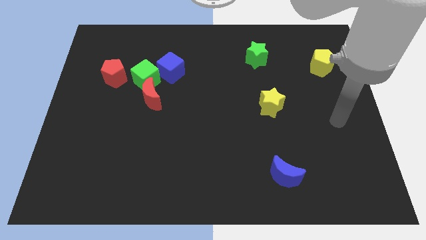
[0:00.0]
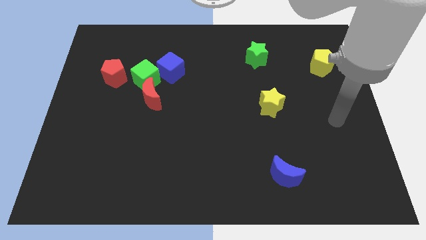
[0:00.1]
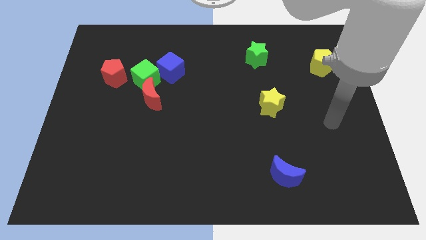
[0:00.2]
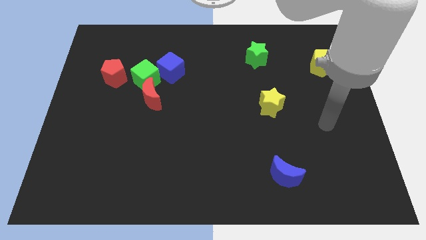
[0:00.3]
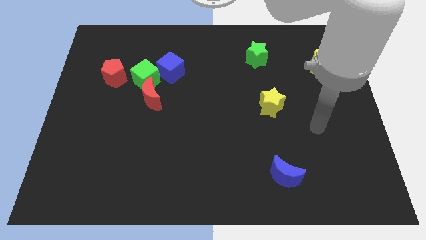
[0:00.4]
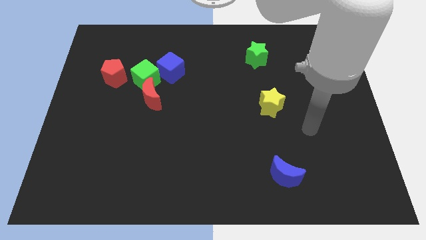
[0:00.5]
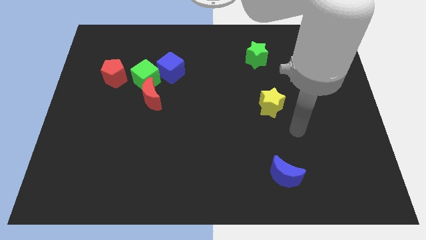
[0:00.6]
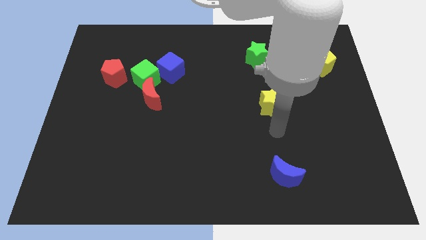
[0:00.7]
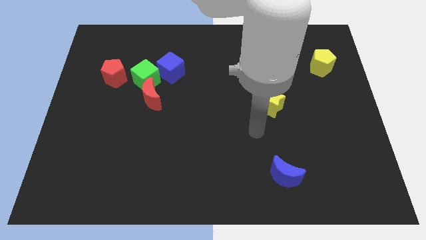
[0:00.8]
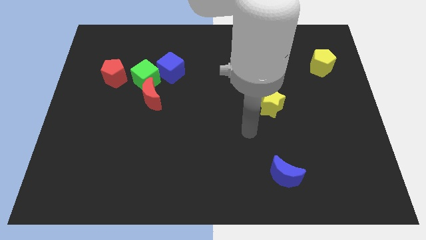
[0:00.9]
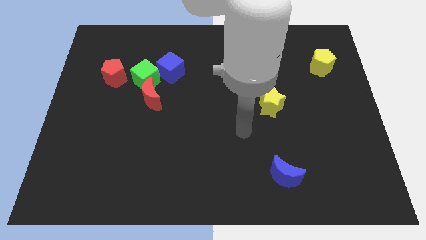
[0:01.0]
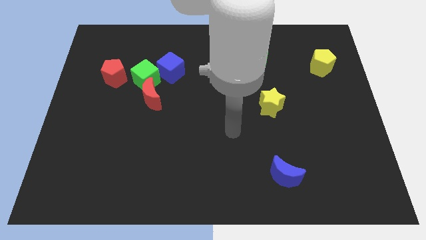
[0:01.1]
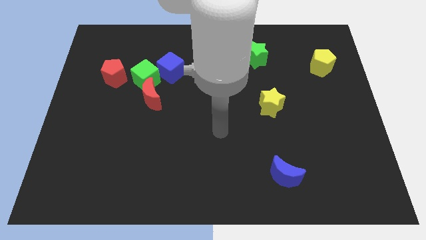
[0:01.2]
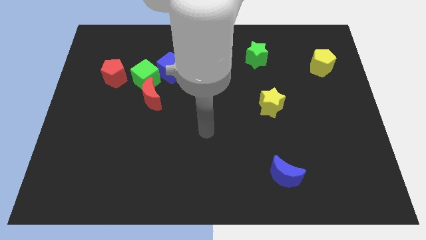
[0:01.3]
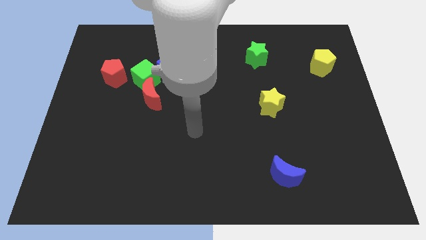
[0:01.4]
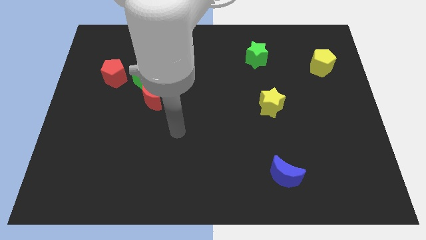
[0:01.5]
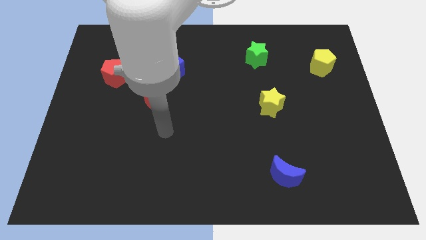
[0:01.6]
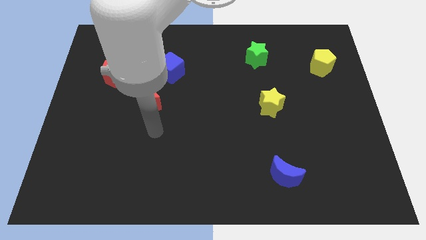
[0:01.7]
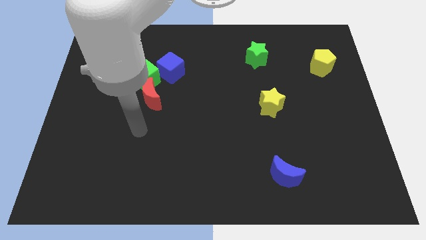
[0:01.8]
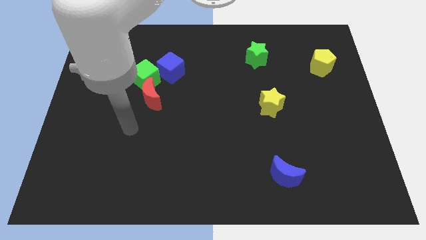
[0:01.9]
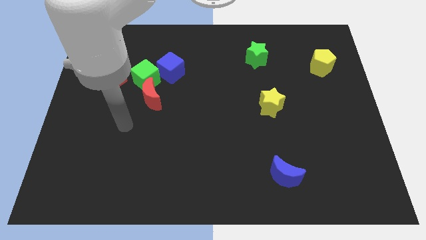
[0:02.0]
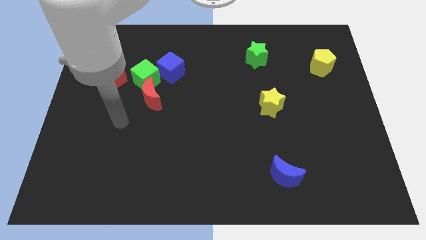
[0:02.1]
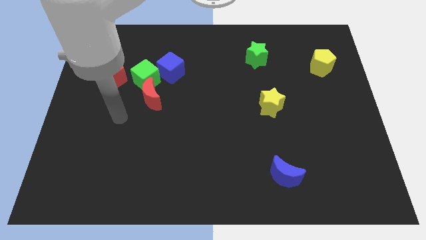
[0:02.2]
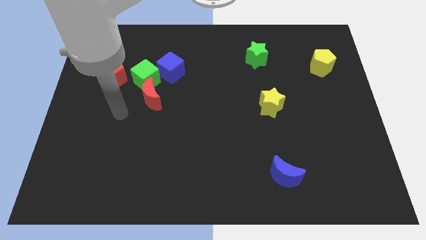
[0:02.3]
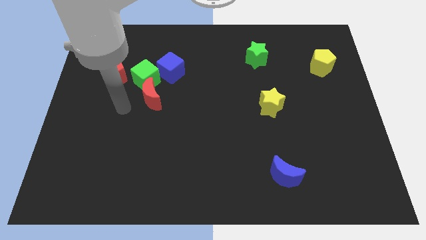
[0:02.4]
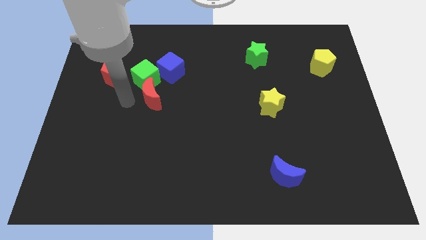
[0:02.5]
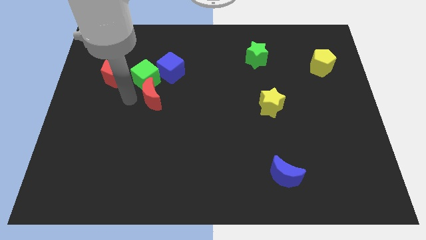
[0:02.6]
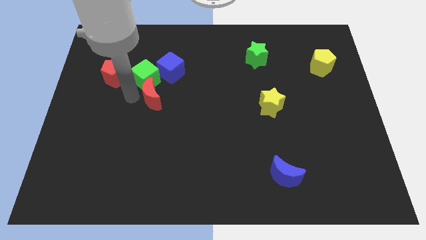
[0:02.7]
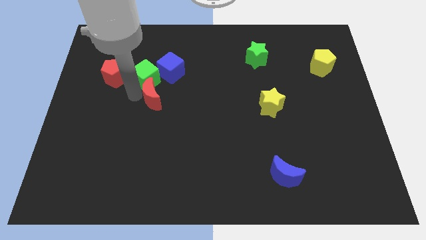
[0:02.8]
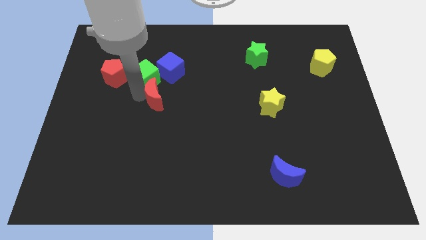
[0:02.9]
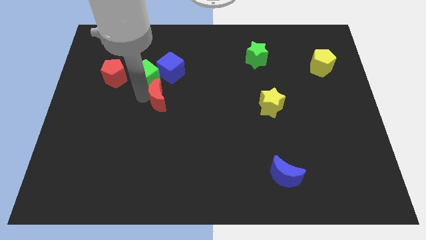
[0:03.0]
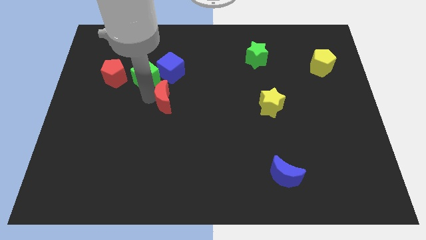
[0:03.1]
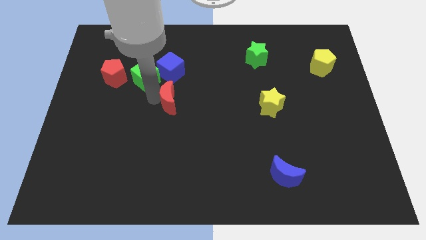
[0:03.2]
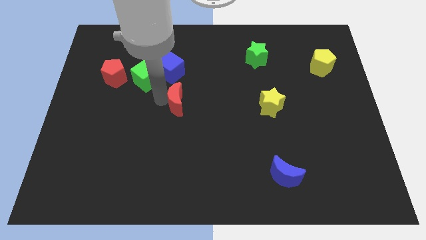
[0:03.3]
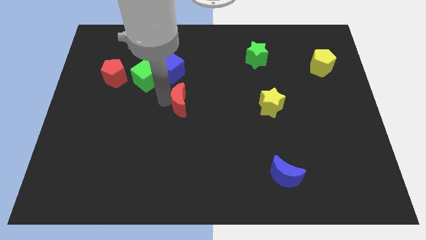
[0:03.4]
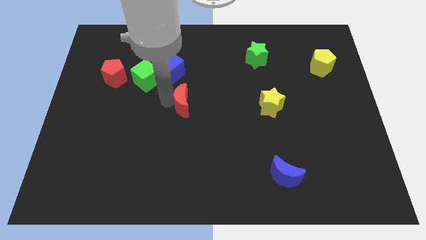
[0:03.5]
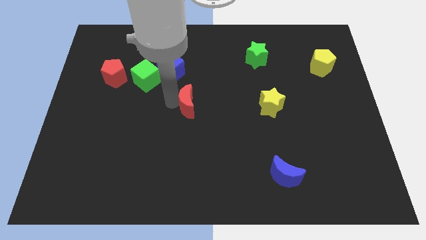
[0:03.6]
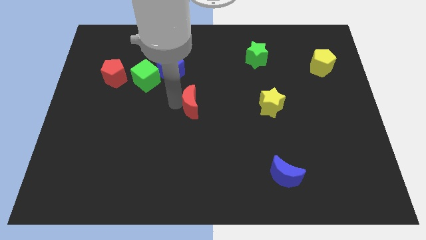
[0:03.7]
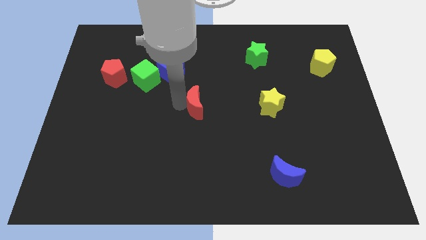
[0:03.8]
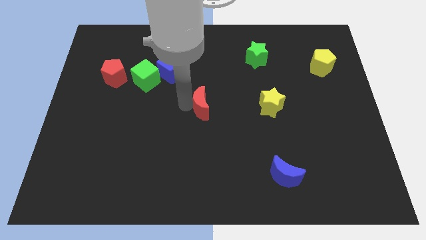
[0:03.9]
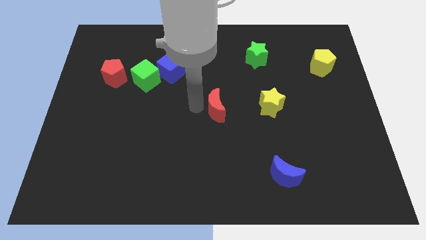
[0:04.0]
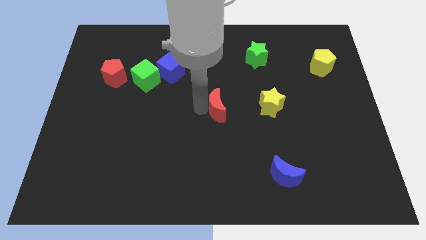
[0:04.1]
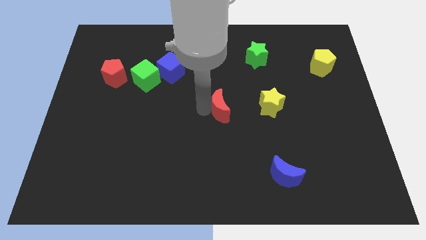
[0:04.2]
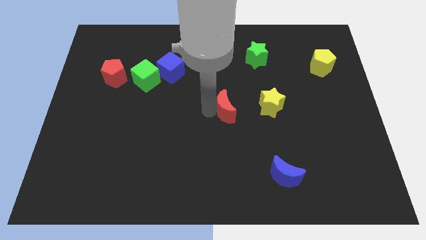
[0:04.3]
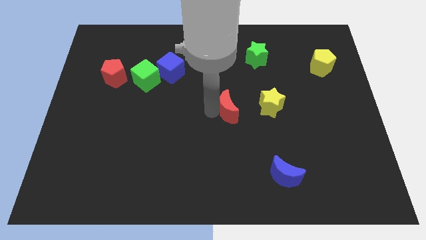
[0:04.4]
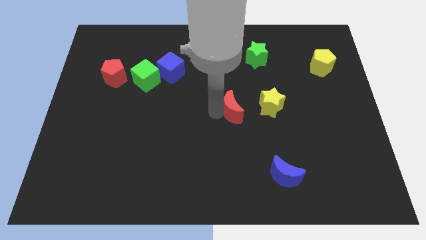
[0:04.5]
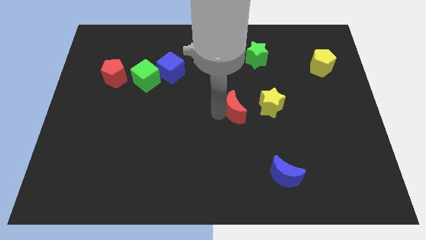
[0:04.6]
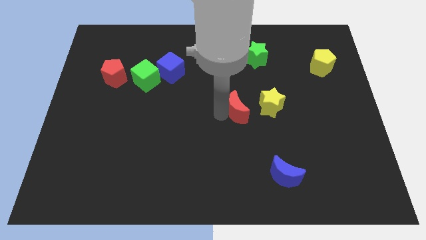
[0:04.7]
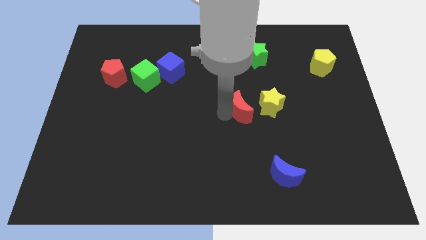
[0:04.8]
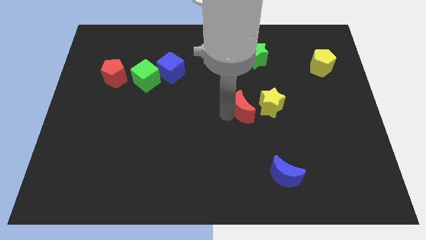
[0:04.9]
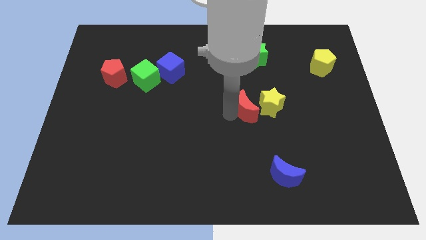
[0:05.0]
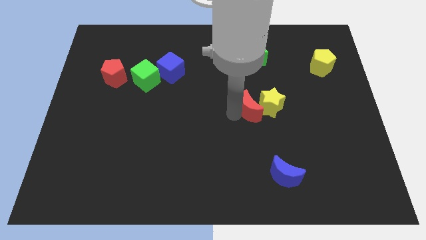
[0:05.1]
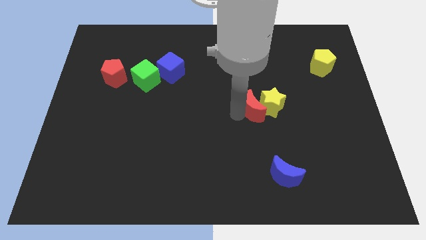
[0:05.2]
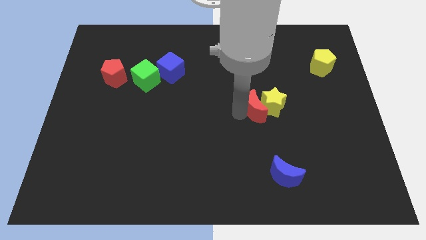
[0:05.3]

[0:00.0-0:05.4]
put the red moon next to the yellow star

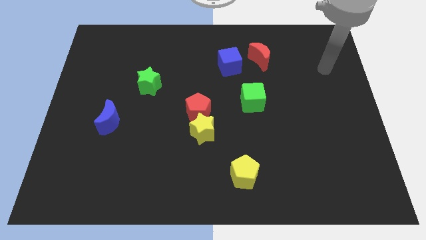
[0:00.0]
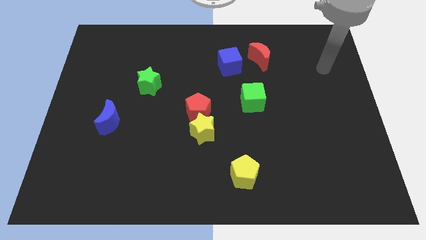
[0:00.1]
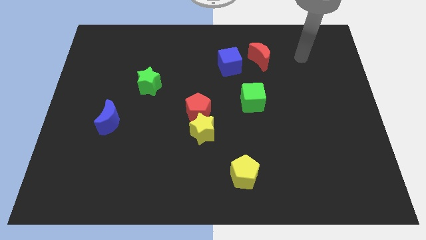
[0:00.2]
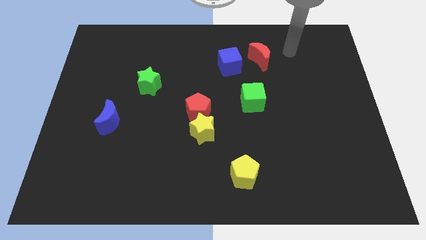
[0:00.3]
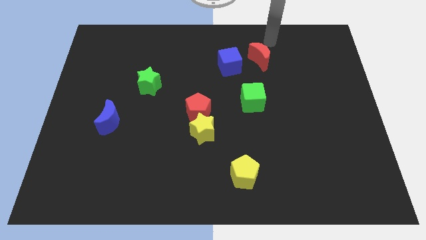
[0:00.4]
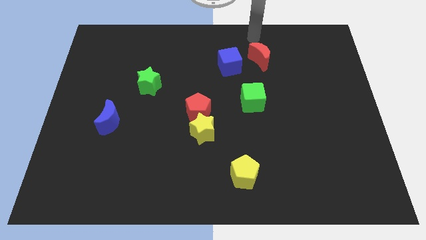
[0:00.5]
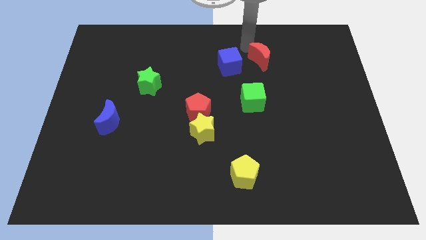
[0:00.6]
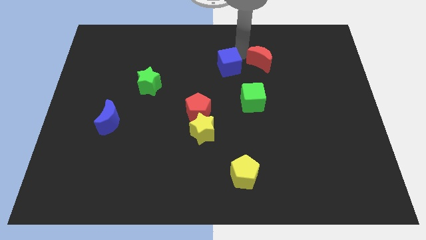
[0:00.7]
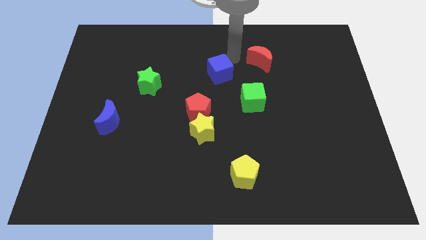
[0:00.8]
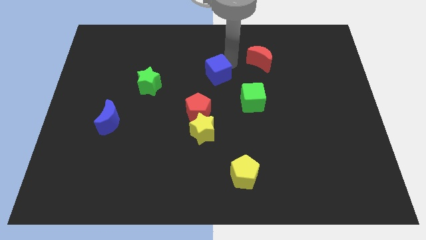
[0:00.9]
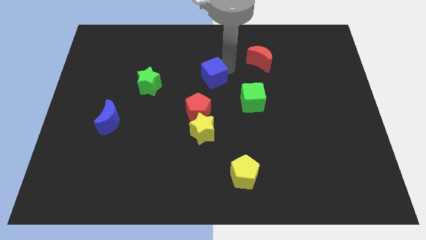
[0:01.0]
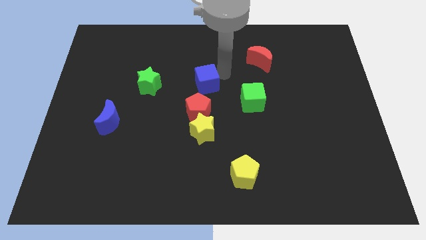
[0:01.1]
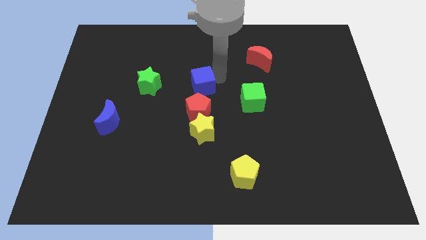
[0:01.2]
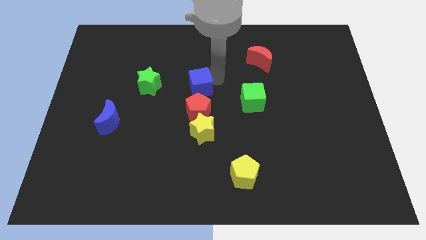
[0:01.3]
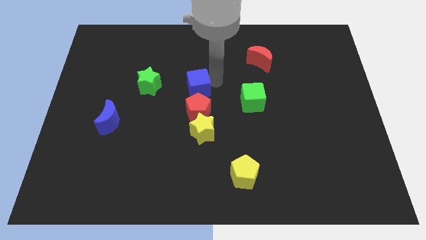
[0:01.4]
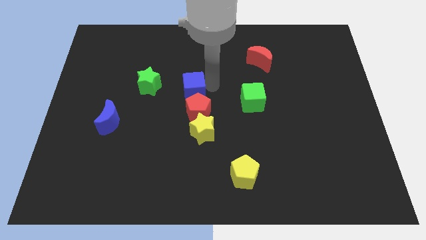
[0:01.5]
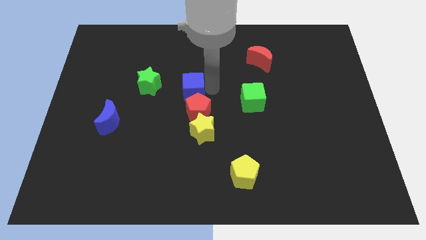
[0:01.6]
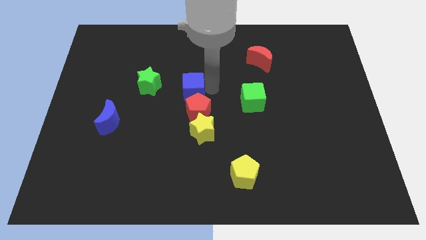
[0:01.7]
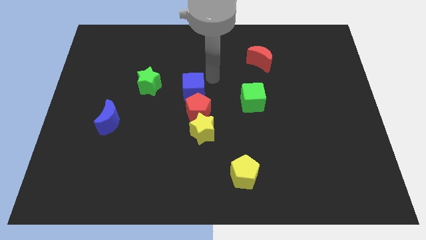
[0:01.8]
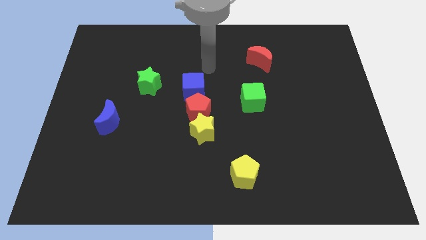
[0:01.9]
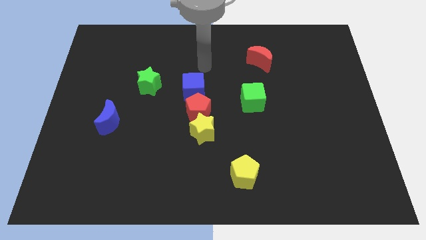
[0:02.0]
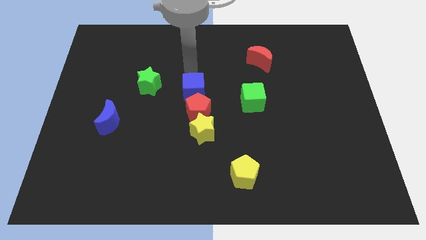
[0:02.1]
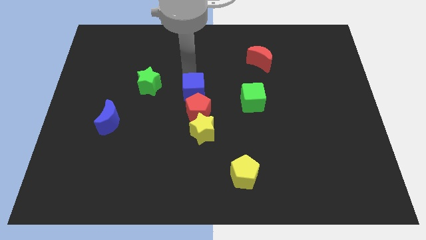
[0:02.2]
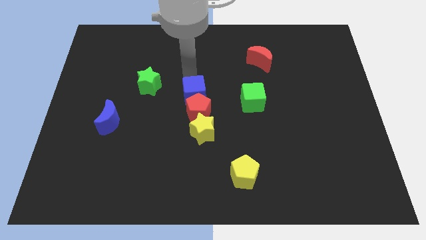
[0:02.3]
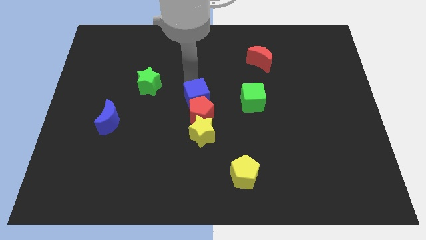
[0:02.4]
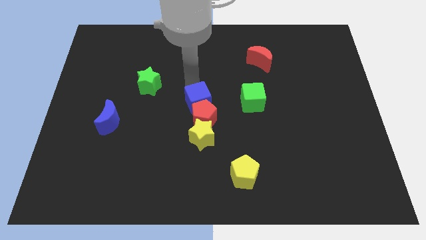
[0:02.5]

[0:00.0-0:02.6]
push the blue cube towards the red pentagon

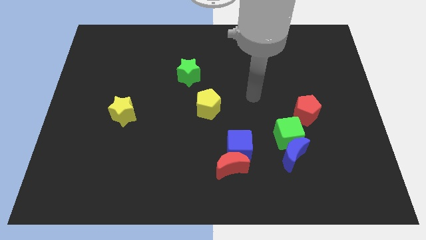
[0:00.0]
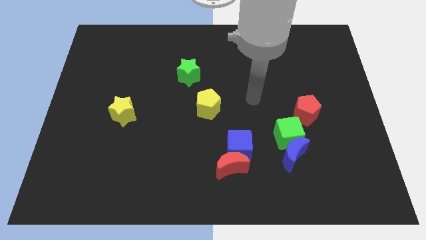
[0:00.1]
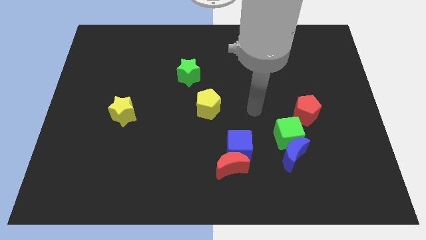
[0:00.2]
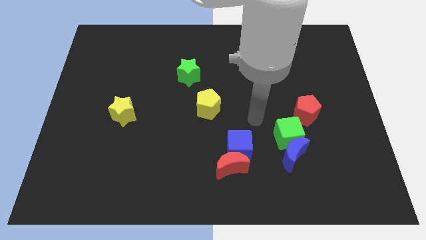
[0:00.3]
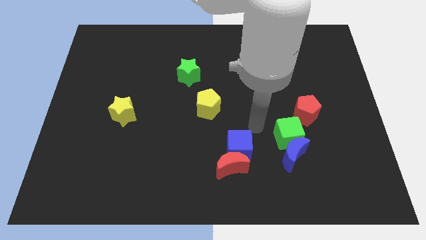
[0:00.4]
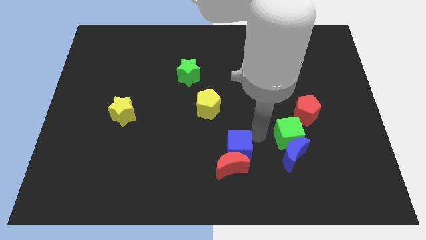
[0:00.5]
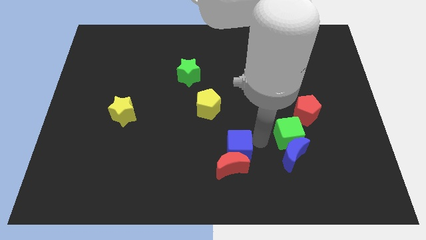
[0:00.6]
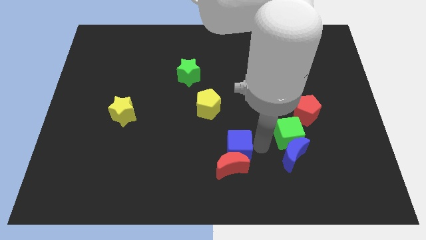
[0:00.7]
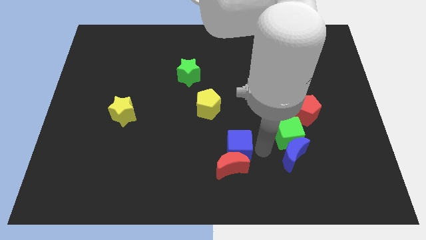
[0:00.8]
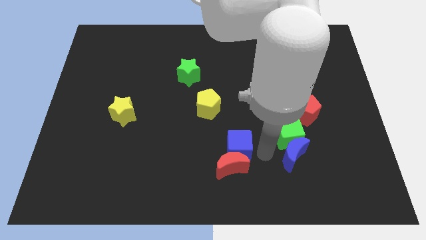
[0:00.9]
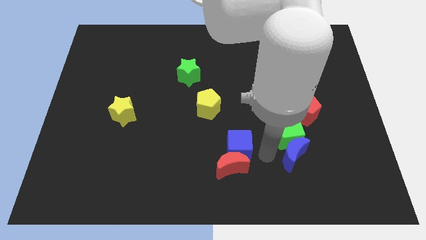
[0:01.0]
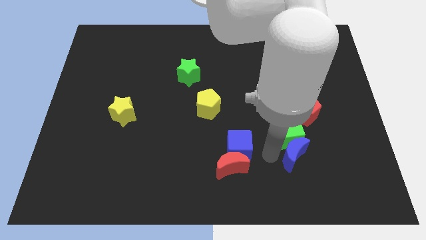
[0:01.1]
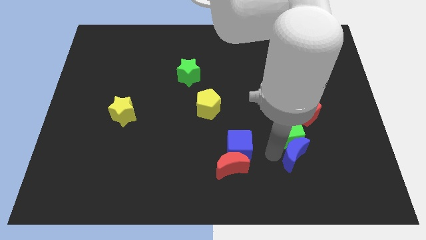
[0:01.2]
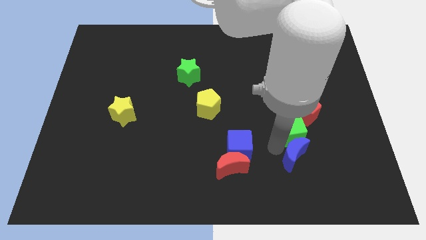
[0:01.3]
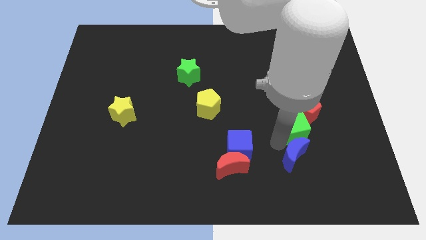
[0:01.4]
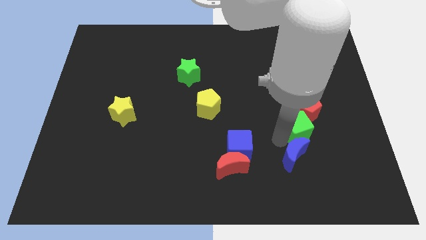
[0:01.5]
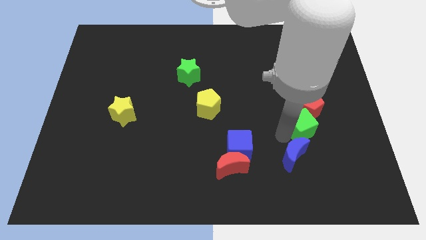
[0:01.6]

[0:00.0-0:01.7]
slide the green cube close to the red pentagon
